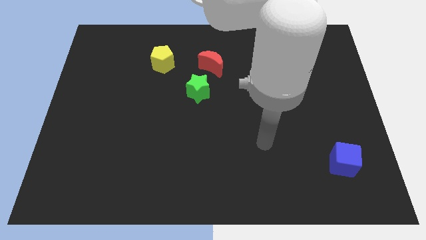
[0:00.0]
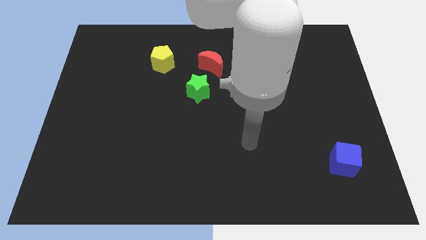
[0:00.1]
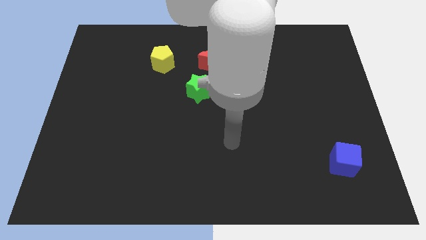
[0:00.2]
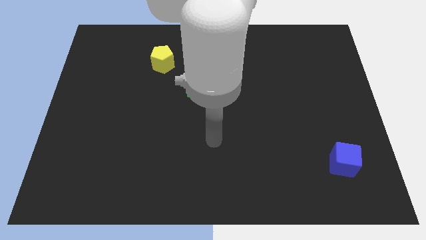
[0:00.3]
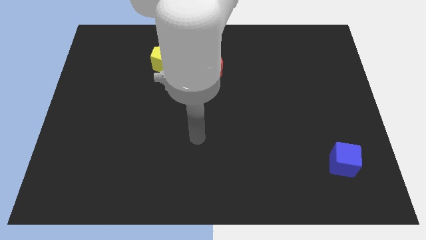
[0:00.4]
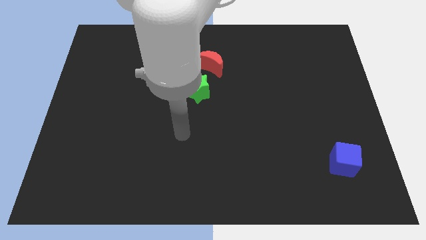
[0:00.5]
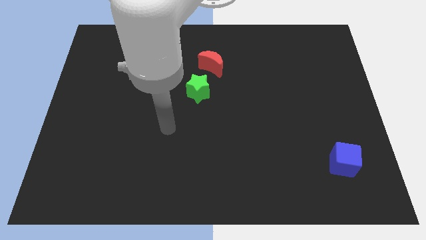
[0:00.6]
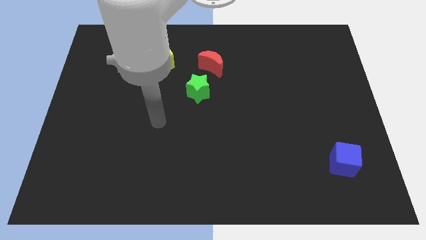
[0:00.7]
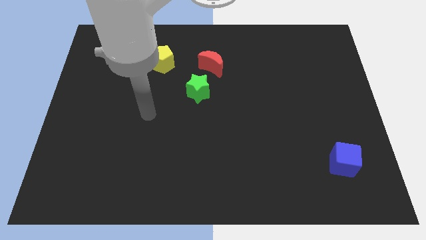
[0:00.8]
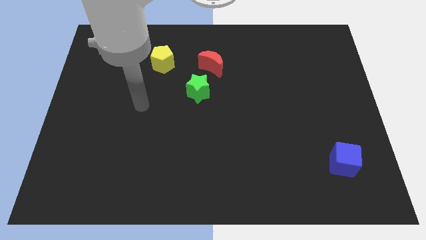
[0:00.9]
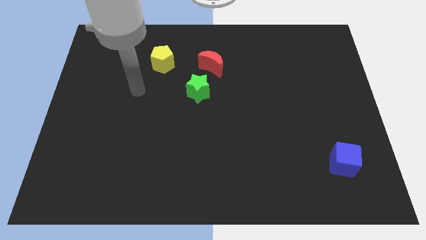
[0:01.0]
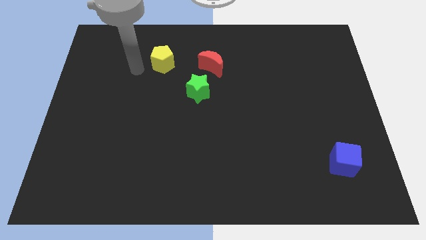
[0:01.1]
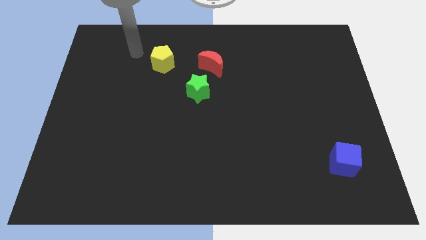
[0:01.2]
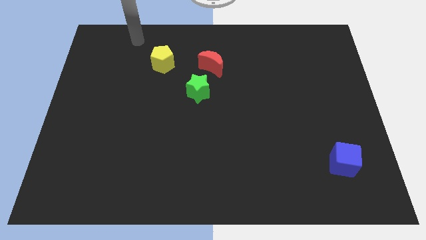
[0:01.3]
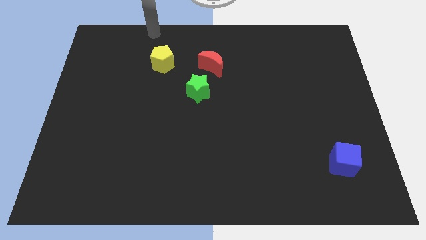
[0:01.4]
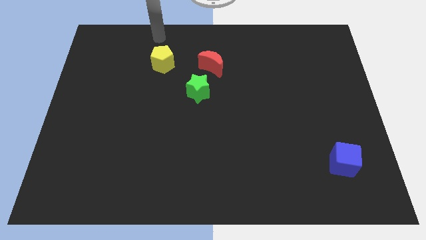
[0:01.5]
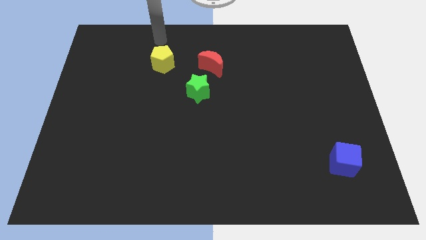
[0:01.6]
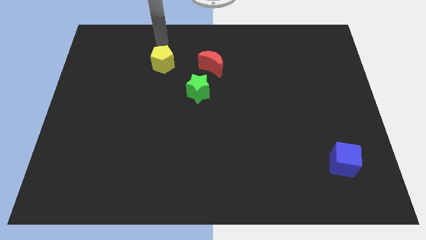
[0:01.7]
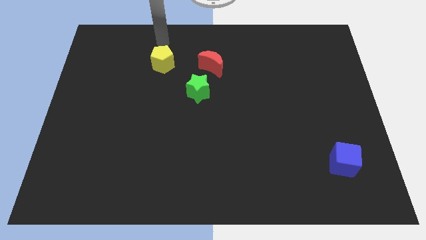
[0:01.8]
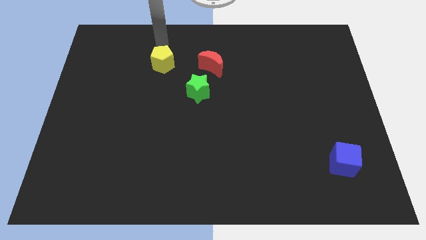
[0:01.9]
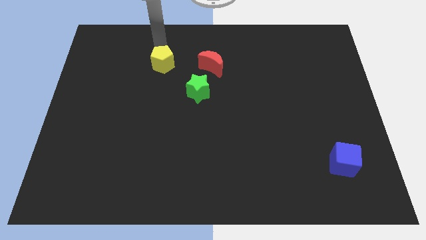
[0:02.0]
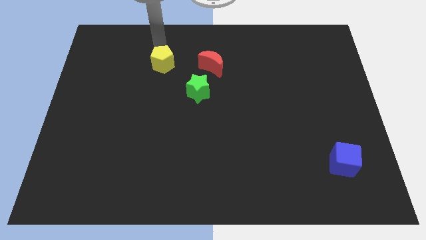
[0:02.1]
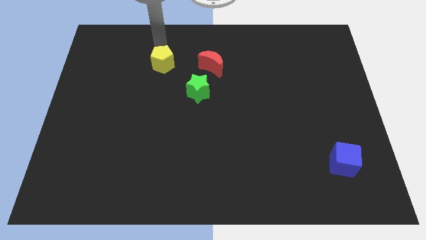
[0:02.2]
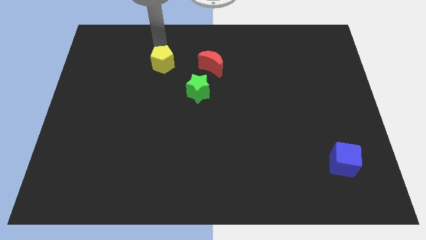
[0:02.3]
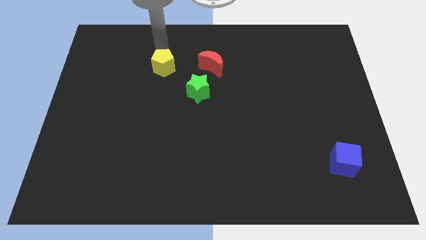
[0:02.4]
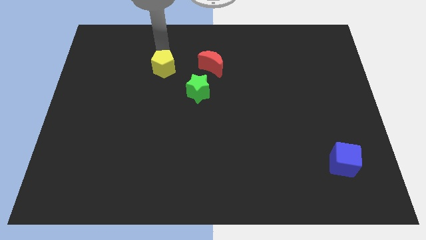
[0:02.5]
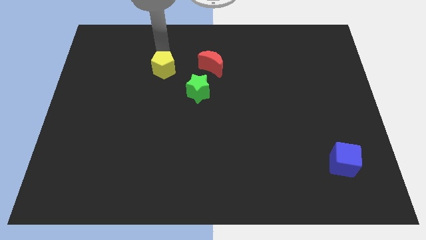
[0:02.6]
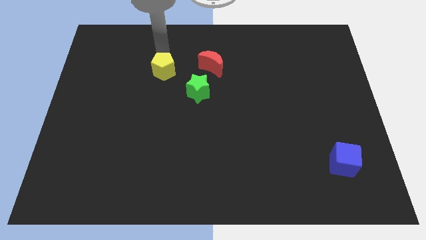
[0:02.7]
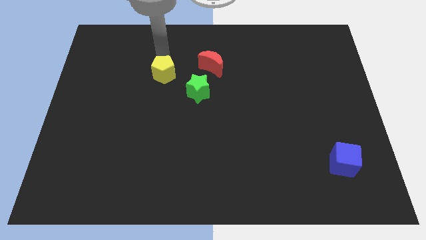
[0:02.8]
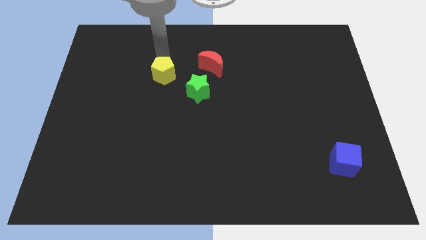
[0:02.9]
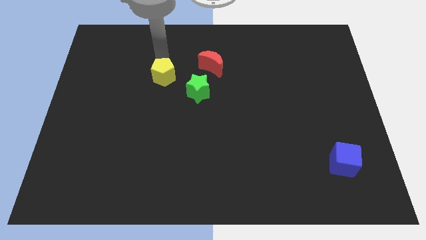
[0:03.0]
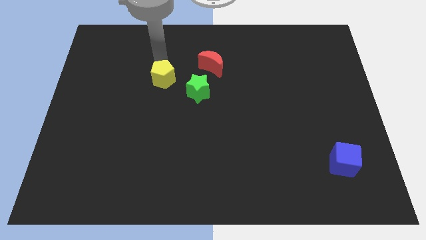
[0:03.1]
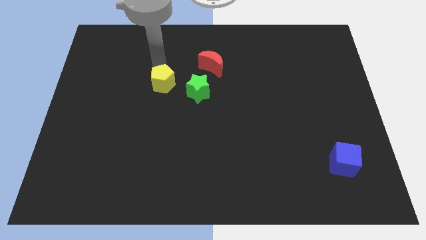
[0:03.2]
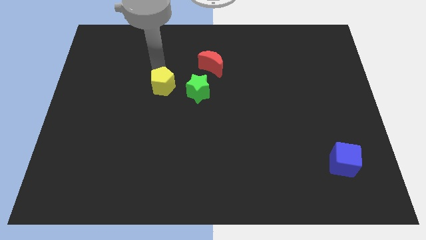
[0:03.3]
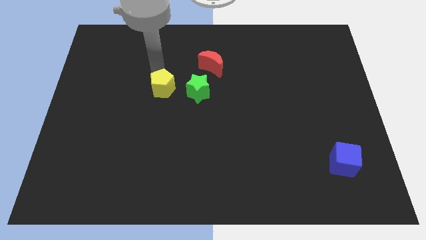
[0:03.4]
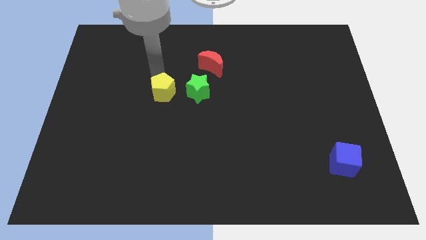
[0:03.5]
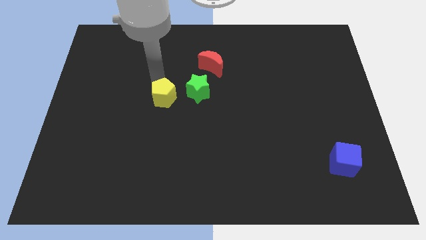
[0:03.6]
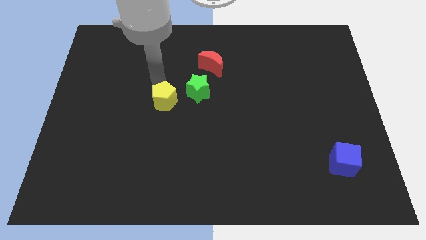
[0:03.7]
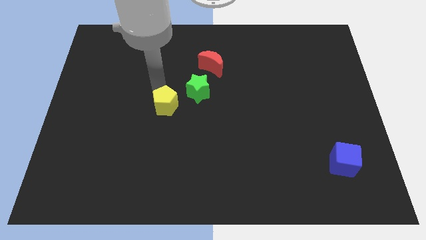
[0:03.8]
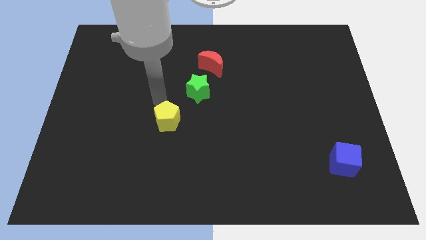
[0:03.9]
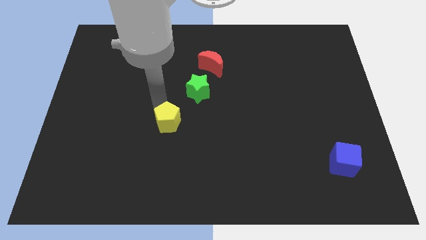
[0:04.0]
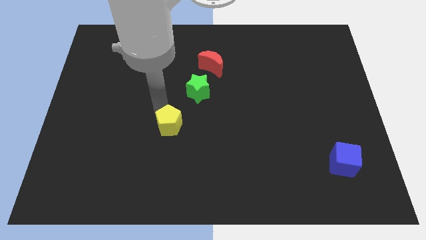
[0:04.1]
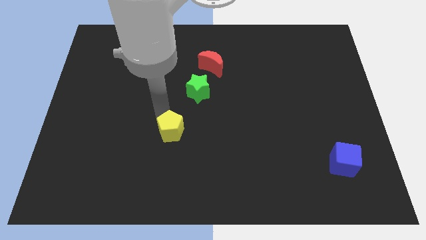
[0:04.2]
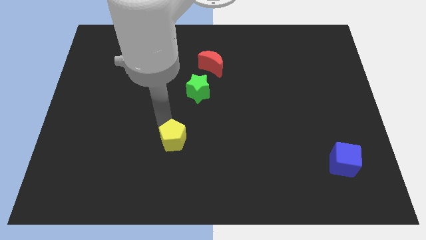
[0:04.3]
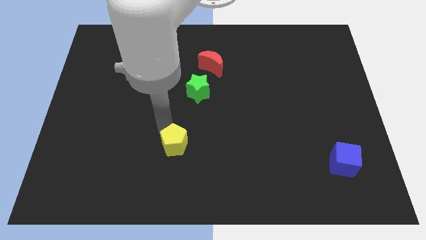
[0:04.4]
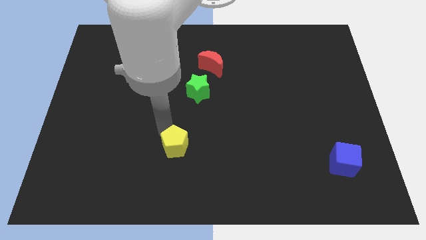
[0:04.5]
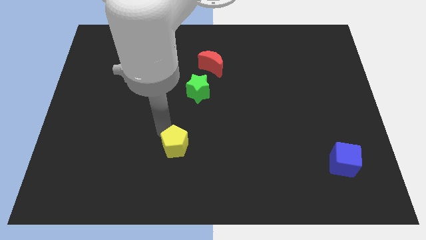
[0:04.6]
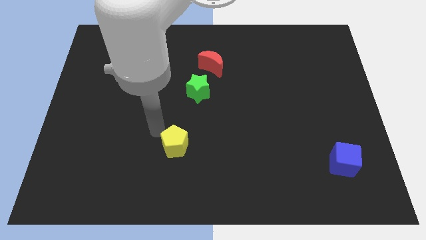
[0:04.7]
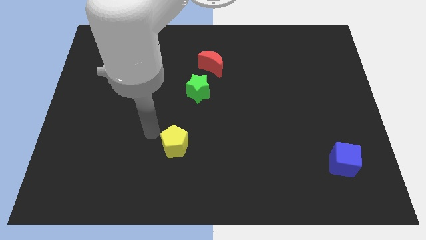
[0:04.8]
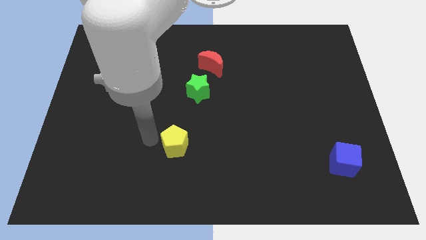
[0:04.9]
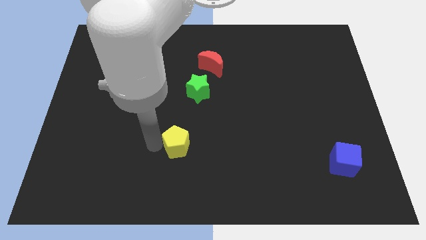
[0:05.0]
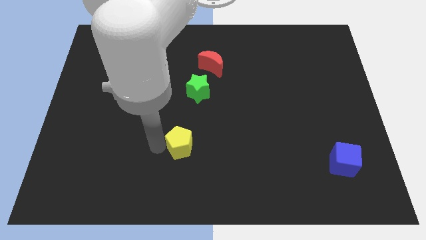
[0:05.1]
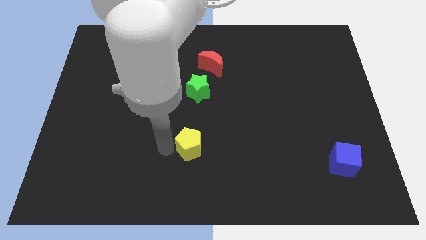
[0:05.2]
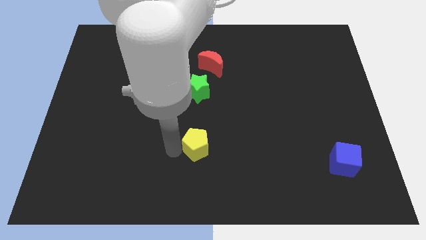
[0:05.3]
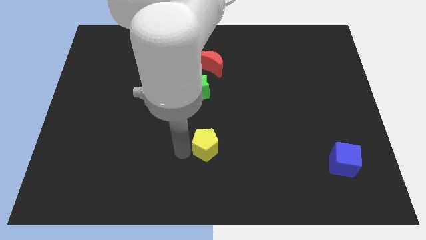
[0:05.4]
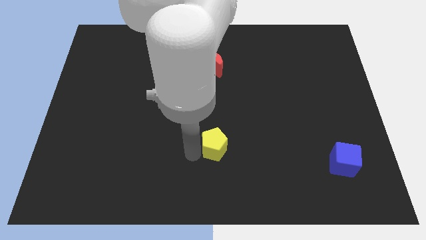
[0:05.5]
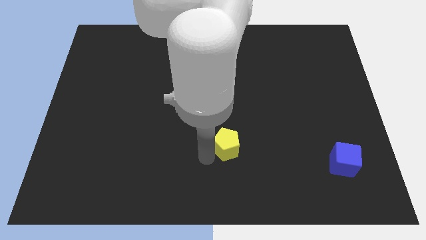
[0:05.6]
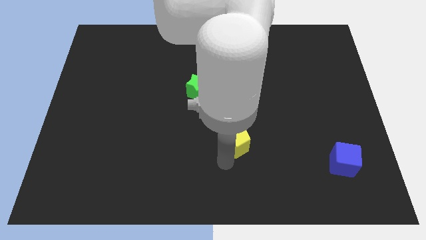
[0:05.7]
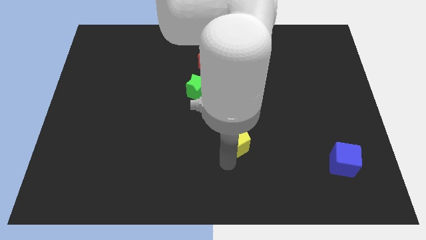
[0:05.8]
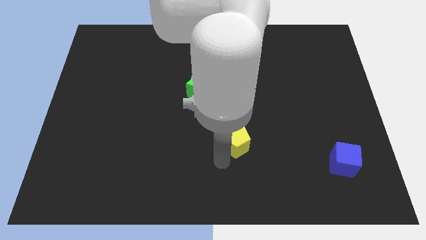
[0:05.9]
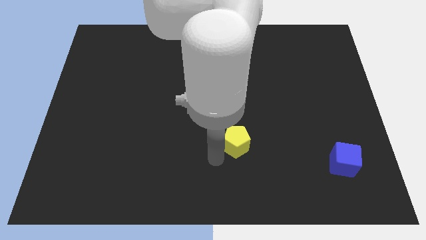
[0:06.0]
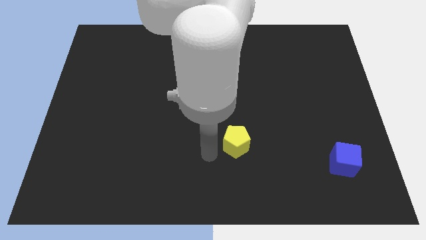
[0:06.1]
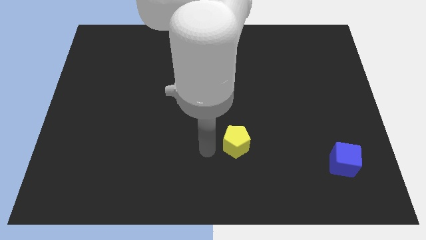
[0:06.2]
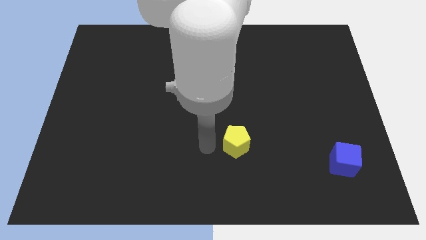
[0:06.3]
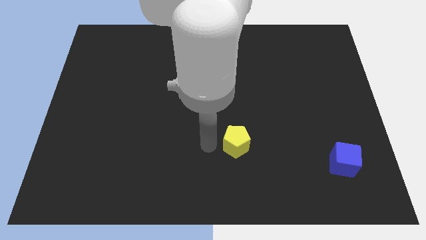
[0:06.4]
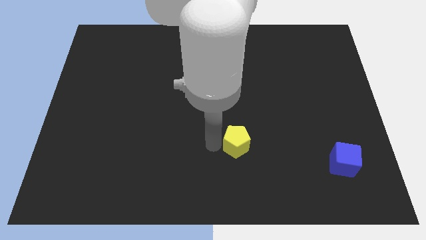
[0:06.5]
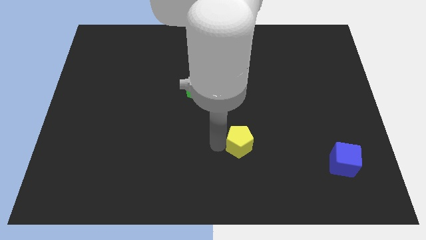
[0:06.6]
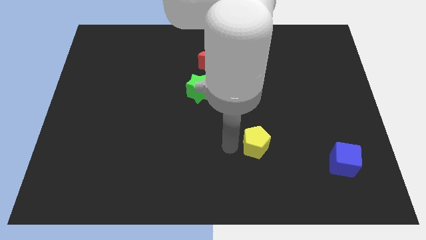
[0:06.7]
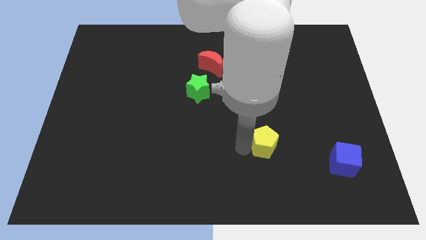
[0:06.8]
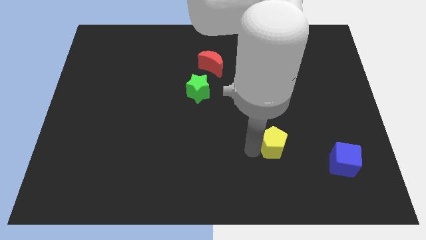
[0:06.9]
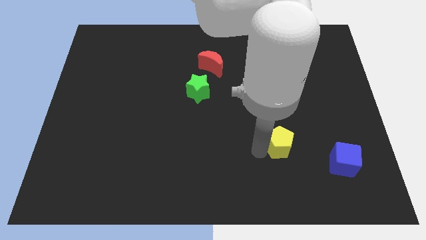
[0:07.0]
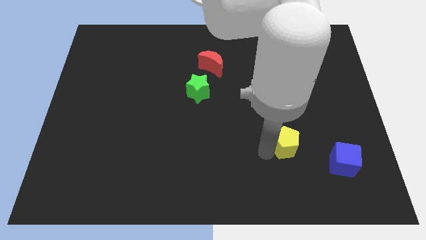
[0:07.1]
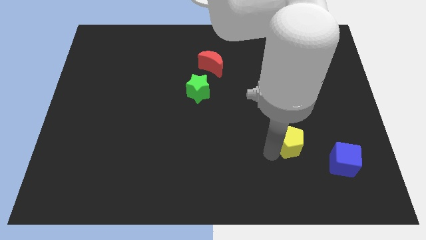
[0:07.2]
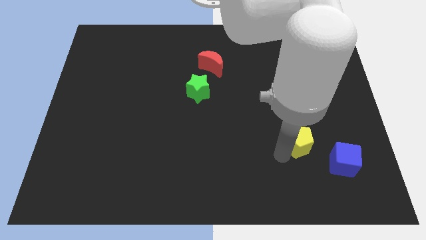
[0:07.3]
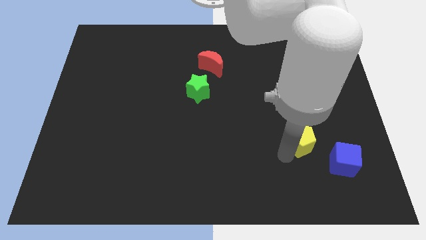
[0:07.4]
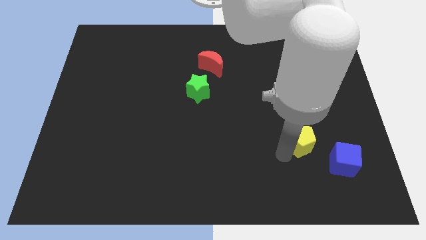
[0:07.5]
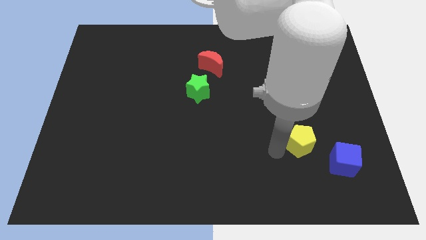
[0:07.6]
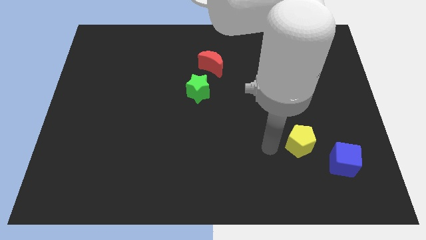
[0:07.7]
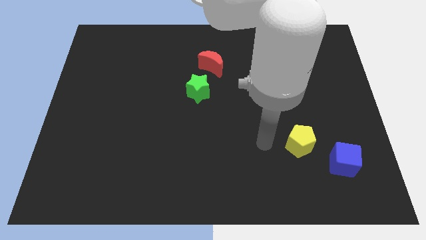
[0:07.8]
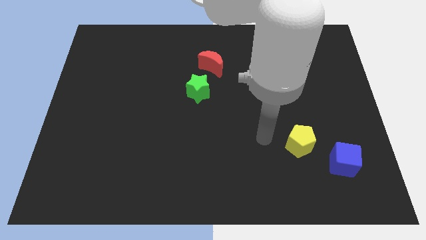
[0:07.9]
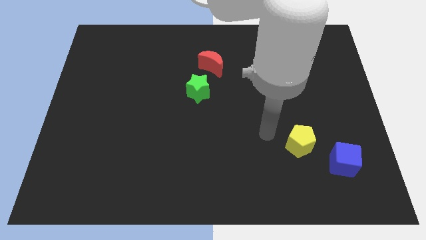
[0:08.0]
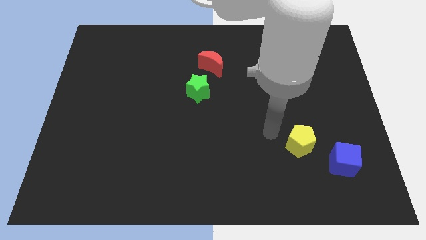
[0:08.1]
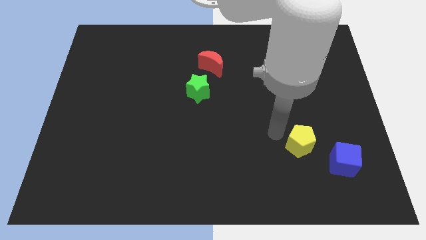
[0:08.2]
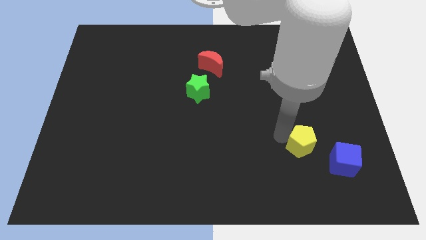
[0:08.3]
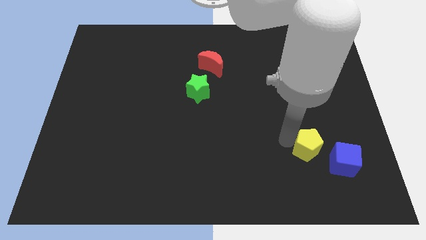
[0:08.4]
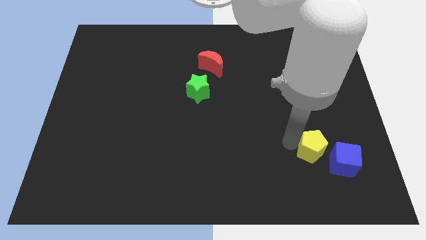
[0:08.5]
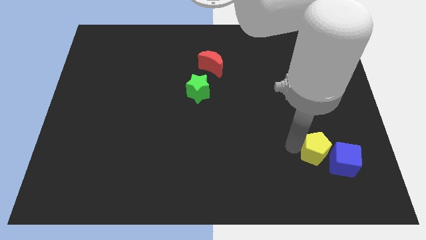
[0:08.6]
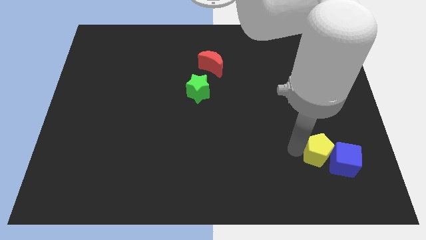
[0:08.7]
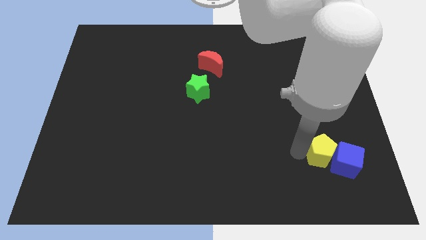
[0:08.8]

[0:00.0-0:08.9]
slide the pentagon to the cube
